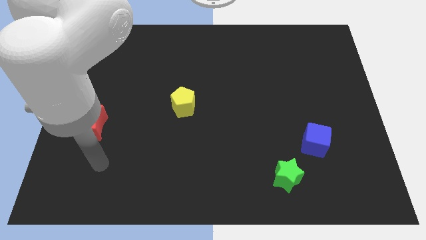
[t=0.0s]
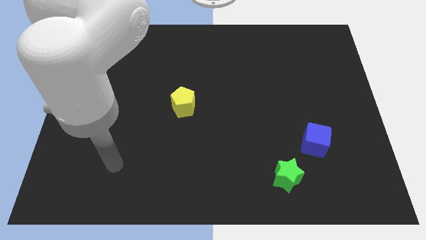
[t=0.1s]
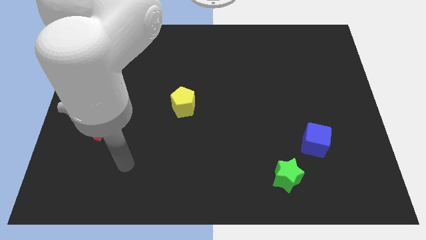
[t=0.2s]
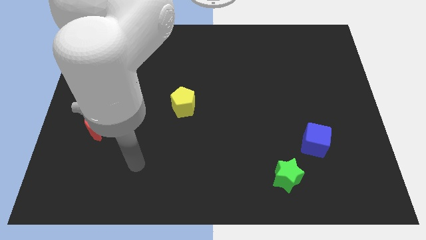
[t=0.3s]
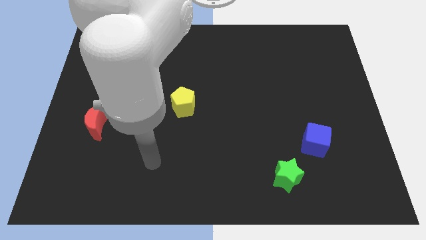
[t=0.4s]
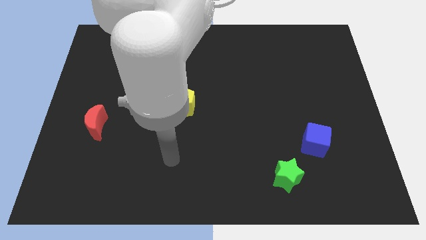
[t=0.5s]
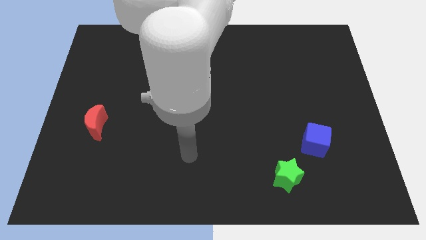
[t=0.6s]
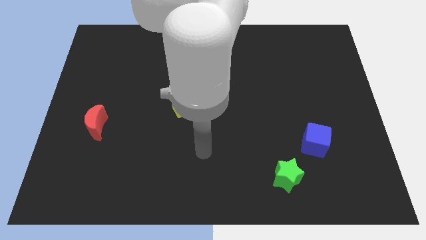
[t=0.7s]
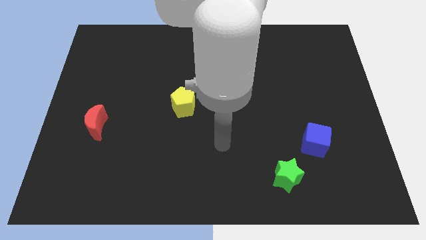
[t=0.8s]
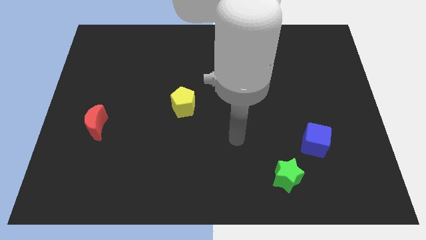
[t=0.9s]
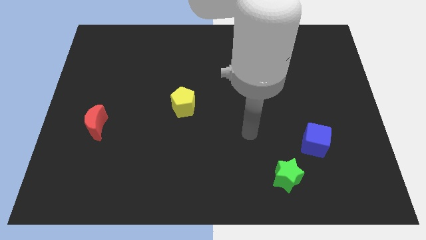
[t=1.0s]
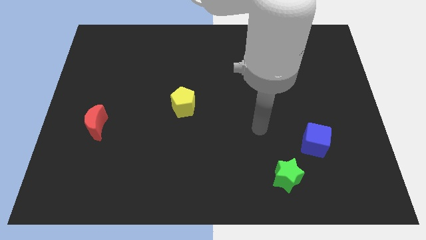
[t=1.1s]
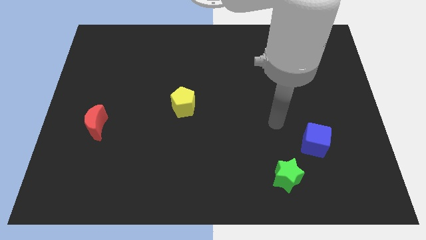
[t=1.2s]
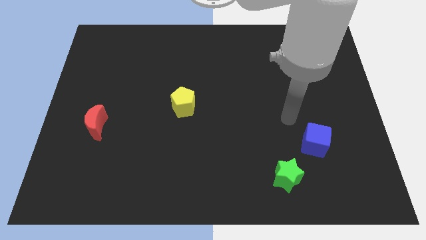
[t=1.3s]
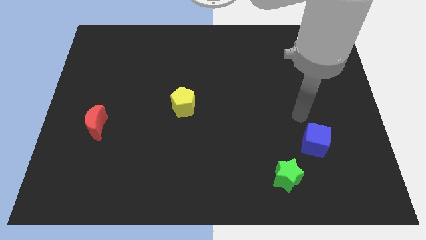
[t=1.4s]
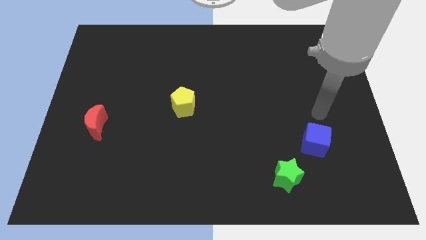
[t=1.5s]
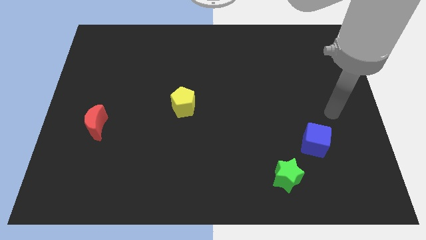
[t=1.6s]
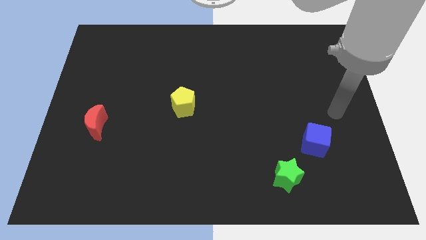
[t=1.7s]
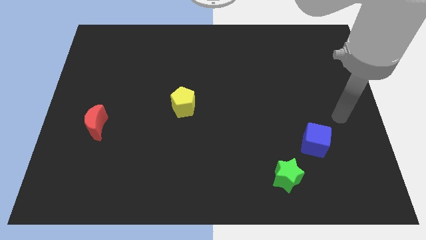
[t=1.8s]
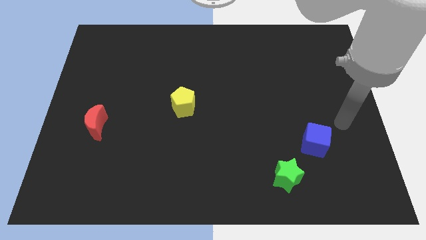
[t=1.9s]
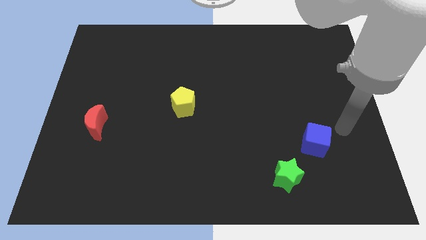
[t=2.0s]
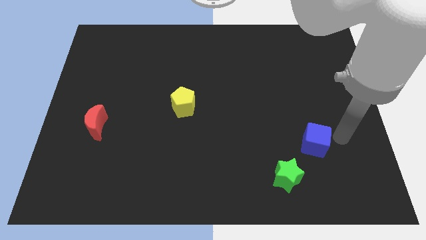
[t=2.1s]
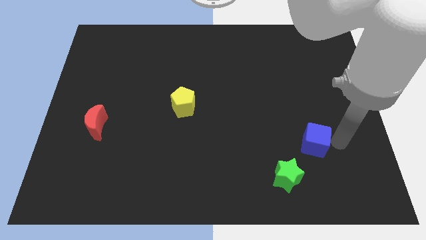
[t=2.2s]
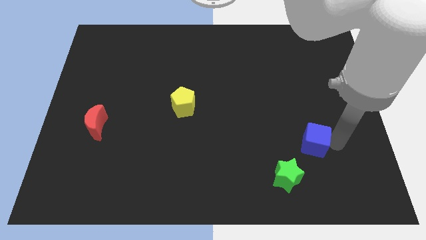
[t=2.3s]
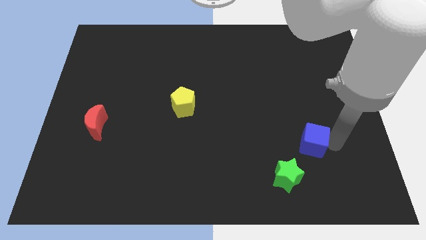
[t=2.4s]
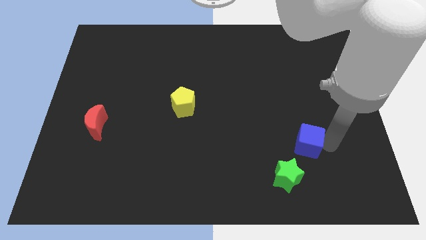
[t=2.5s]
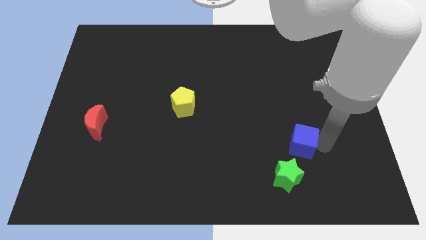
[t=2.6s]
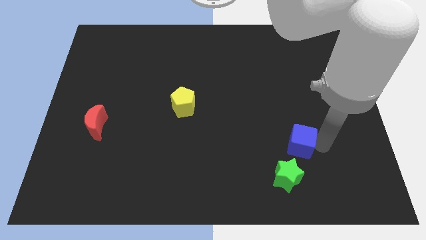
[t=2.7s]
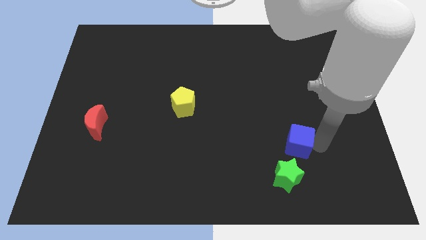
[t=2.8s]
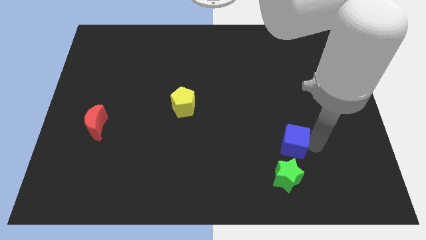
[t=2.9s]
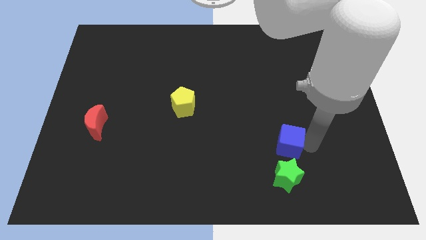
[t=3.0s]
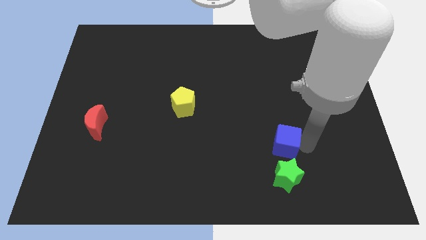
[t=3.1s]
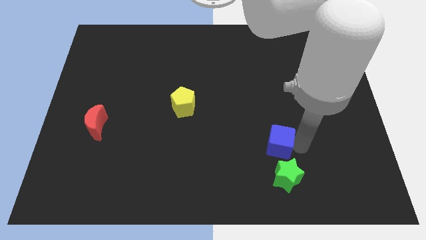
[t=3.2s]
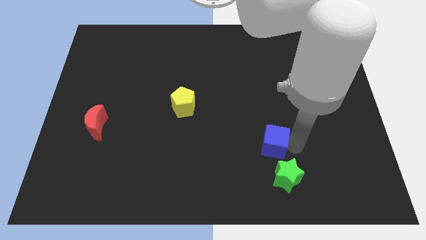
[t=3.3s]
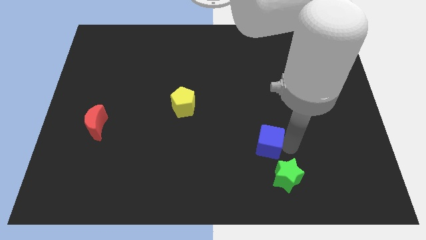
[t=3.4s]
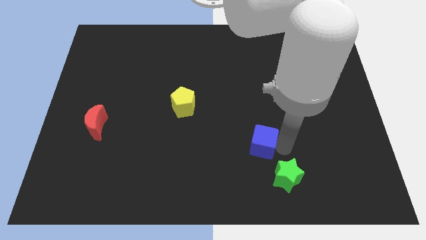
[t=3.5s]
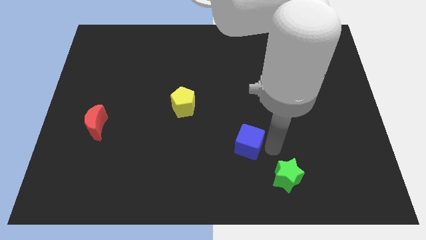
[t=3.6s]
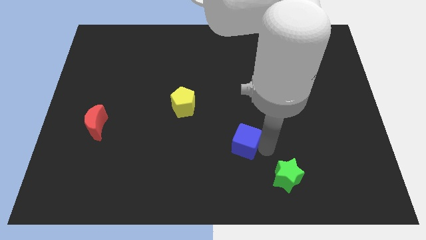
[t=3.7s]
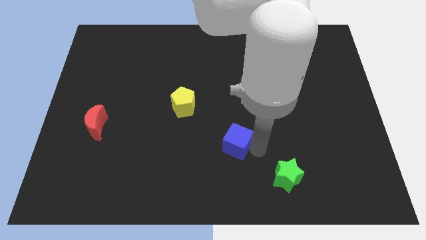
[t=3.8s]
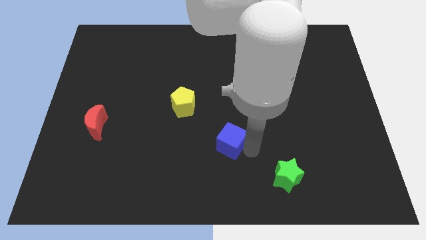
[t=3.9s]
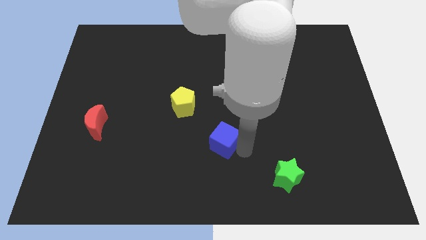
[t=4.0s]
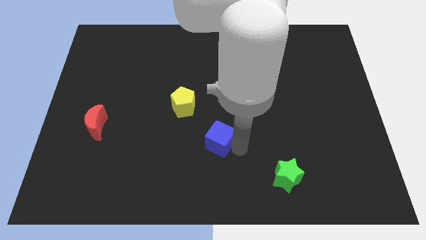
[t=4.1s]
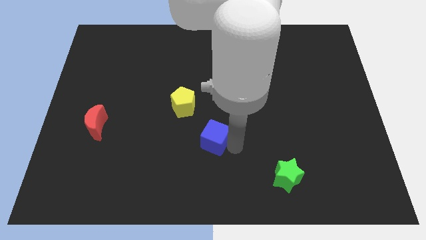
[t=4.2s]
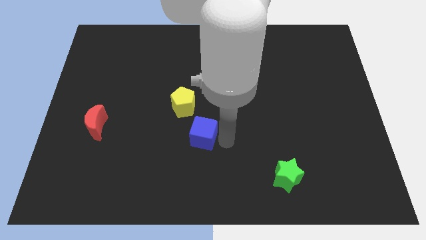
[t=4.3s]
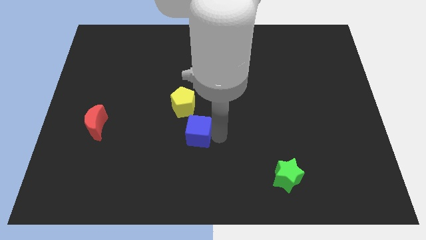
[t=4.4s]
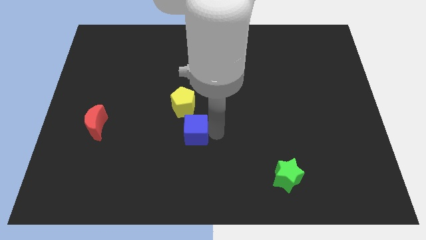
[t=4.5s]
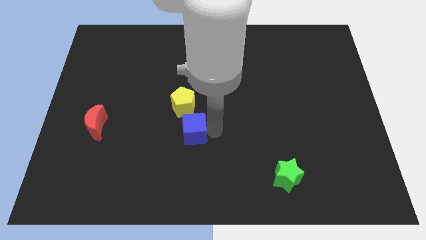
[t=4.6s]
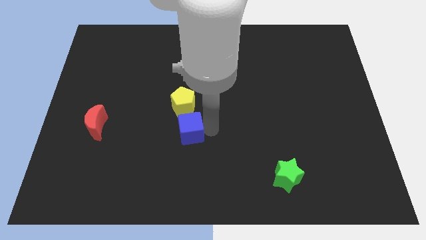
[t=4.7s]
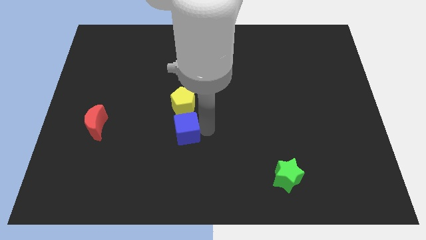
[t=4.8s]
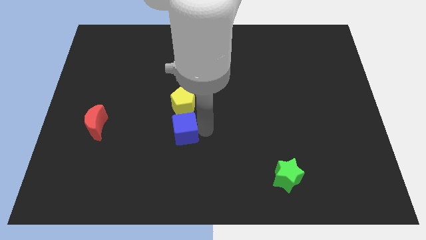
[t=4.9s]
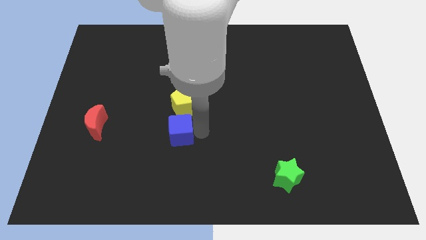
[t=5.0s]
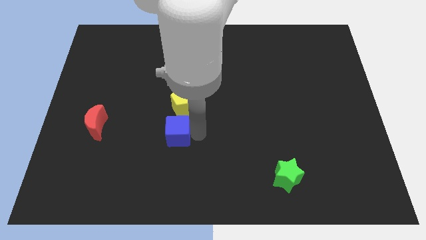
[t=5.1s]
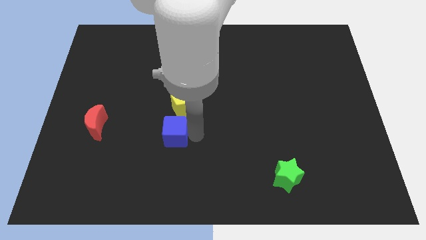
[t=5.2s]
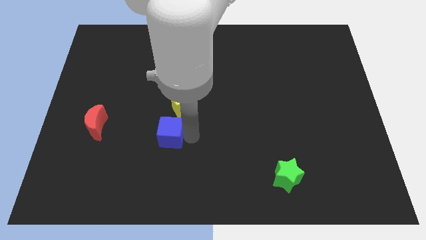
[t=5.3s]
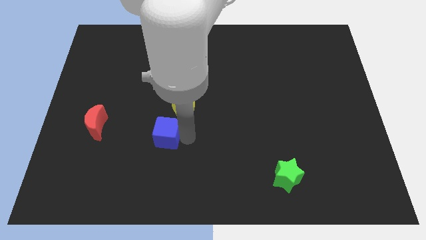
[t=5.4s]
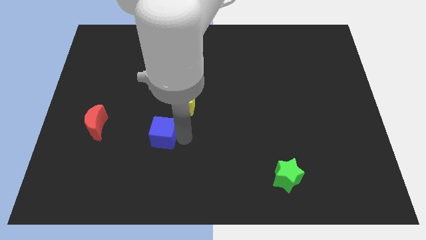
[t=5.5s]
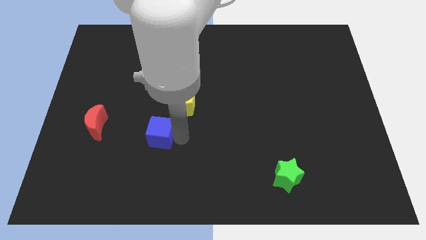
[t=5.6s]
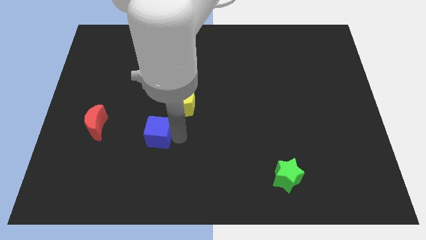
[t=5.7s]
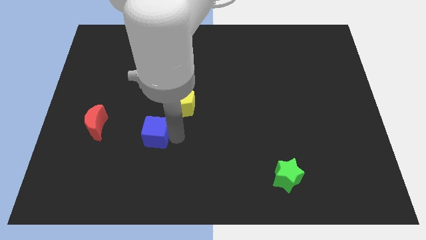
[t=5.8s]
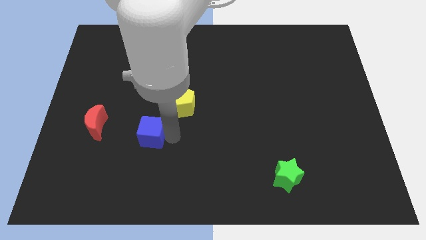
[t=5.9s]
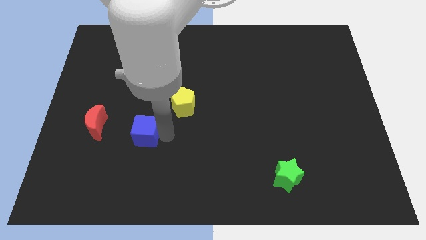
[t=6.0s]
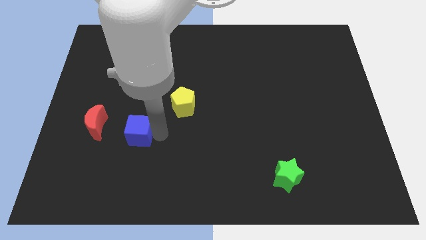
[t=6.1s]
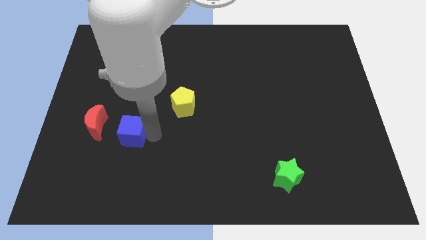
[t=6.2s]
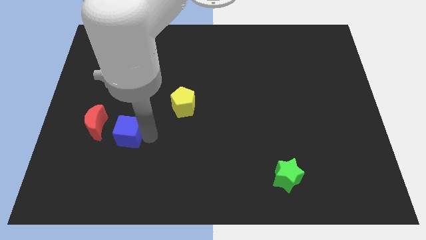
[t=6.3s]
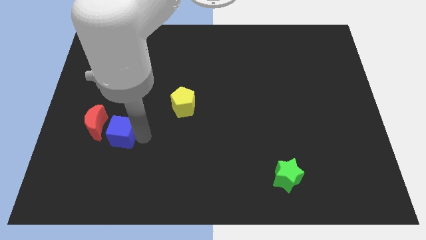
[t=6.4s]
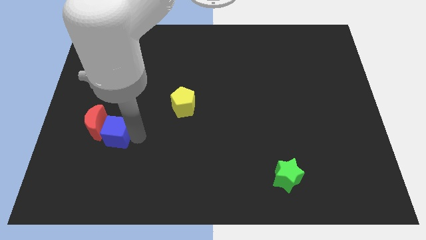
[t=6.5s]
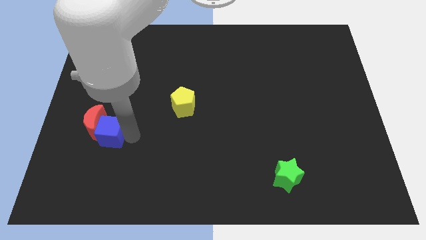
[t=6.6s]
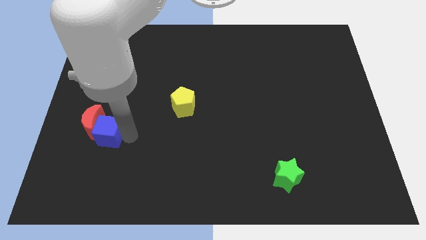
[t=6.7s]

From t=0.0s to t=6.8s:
push the blue block towards the red moon

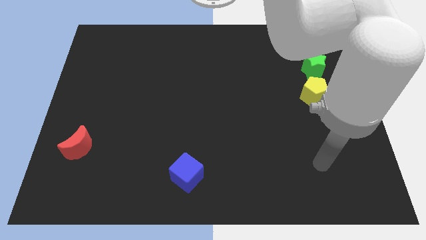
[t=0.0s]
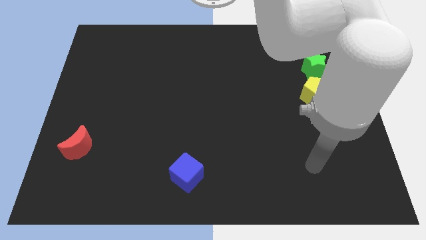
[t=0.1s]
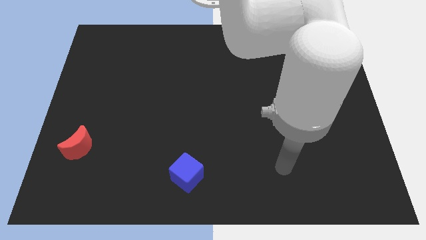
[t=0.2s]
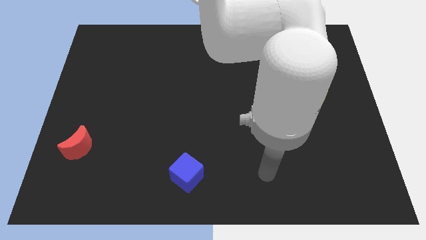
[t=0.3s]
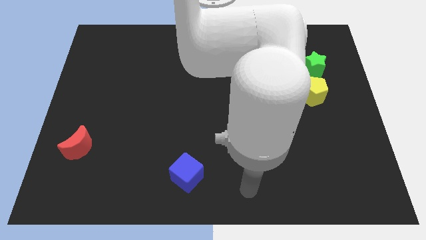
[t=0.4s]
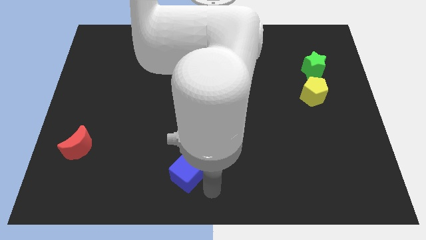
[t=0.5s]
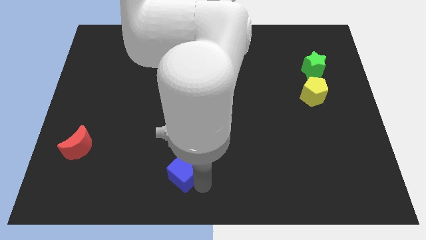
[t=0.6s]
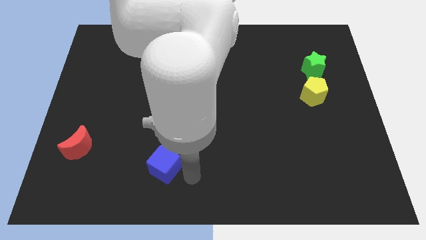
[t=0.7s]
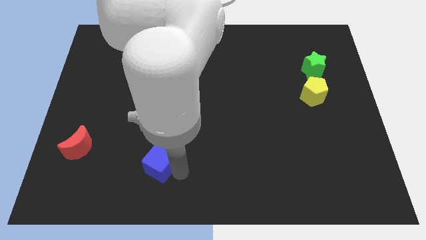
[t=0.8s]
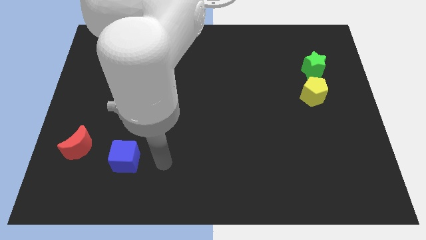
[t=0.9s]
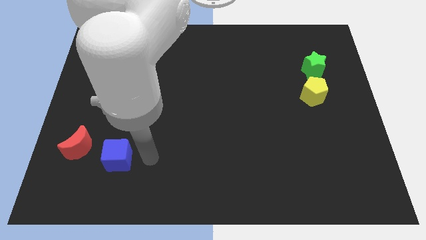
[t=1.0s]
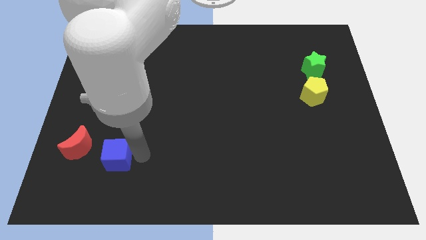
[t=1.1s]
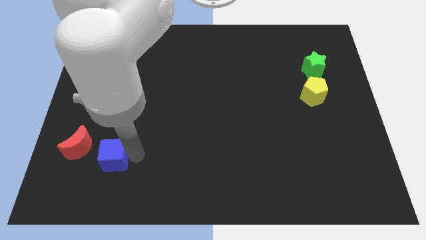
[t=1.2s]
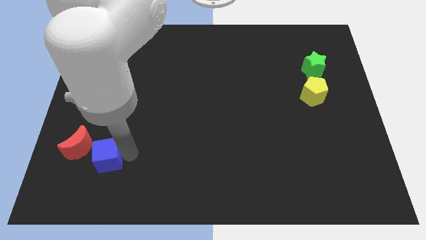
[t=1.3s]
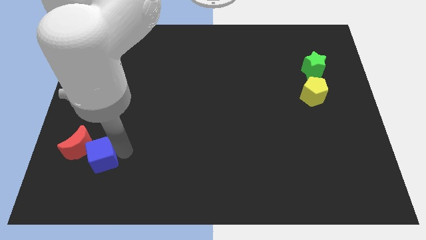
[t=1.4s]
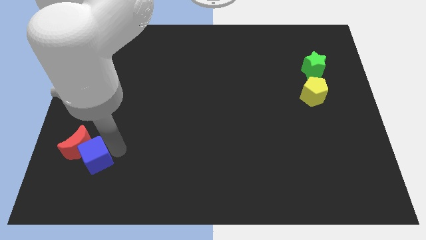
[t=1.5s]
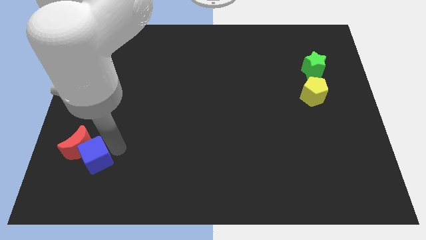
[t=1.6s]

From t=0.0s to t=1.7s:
push the blue block close to the red block

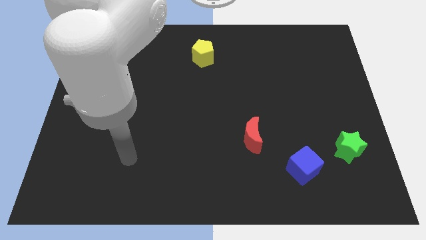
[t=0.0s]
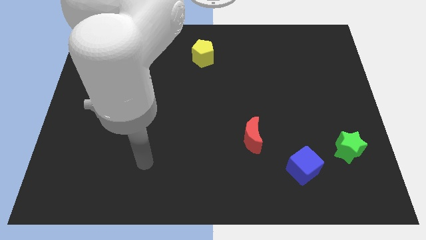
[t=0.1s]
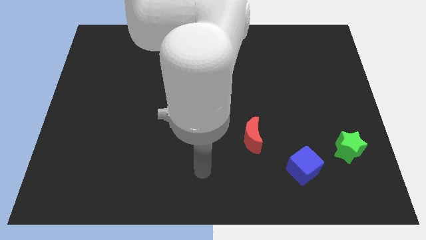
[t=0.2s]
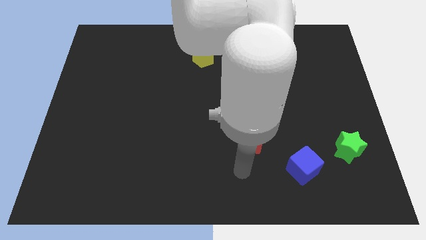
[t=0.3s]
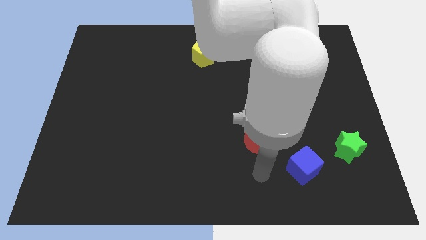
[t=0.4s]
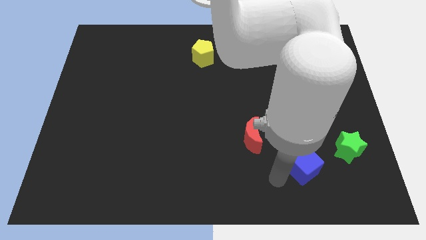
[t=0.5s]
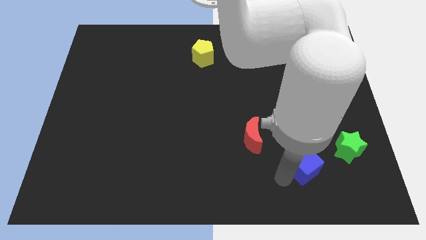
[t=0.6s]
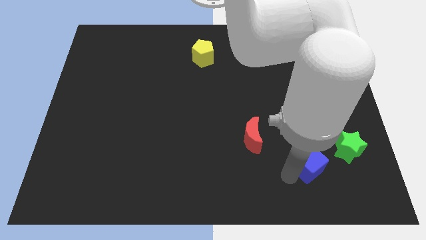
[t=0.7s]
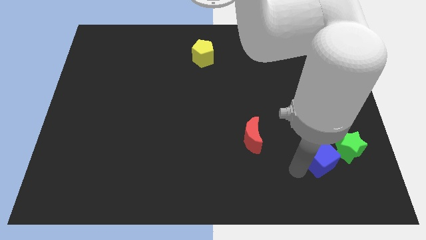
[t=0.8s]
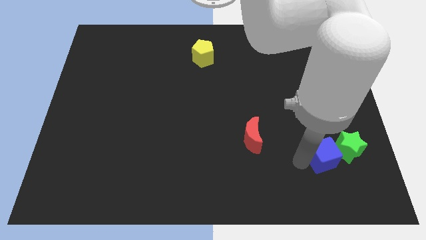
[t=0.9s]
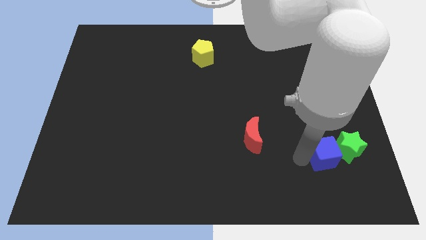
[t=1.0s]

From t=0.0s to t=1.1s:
slide the blue cube close to the green block
